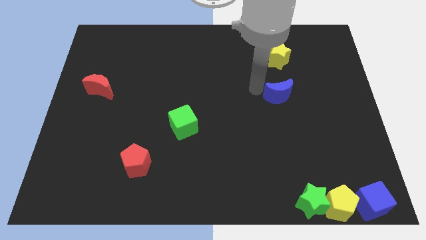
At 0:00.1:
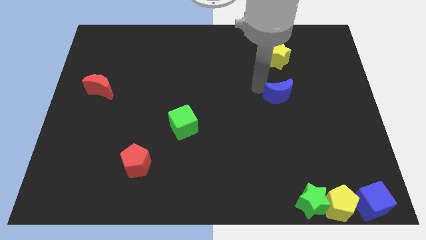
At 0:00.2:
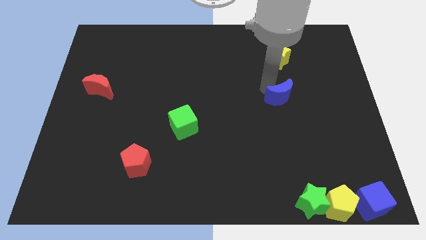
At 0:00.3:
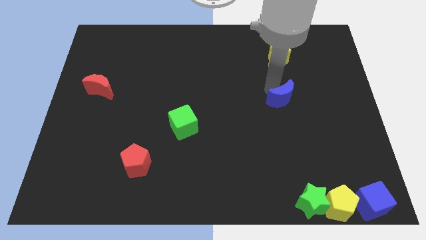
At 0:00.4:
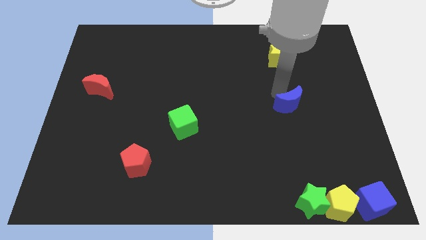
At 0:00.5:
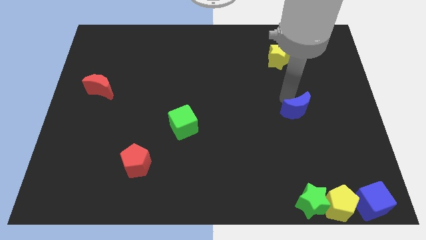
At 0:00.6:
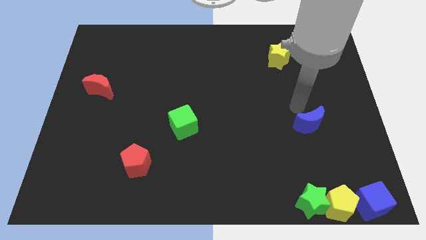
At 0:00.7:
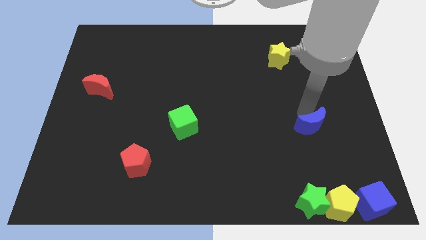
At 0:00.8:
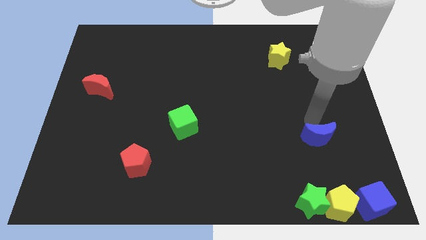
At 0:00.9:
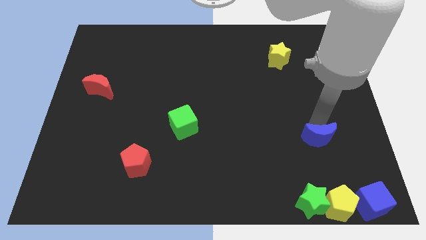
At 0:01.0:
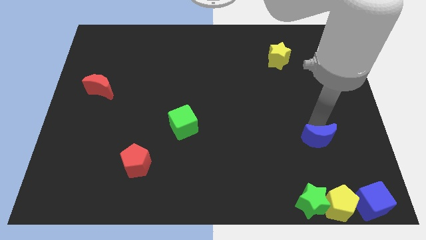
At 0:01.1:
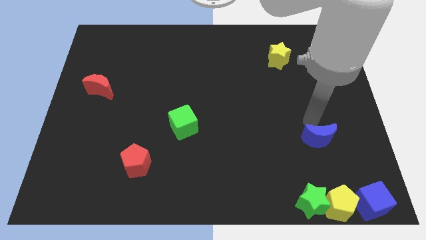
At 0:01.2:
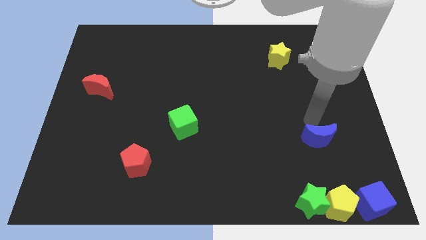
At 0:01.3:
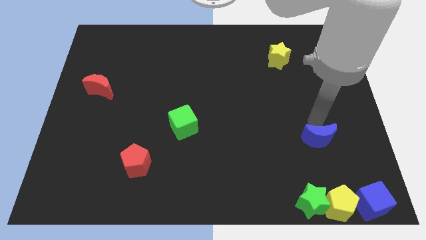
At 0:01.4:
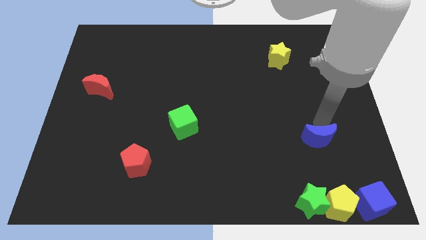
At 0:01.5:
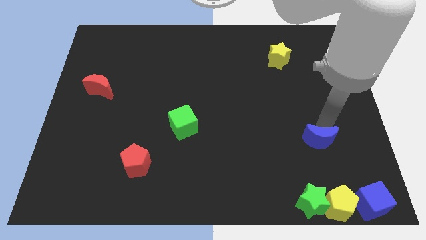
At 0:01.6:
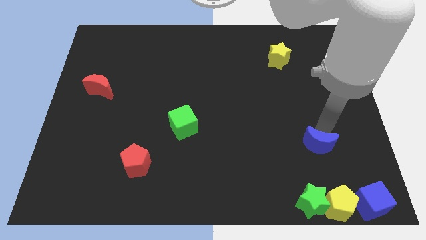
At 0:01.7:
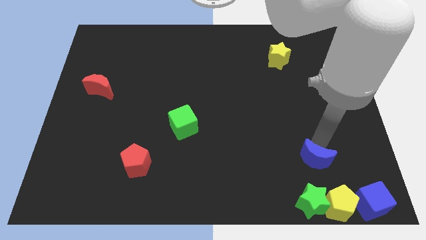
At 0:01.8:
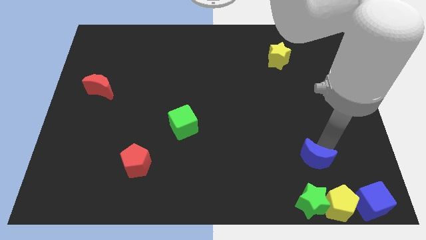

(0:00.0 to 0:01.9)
put the blue moon diagonally top right to green star

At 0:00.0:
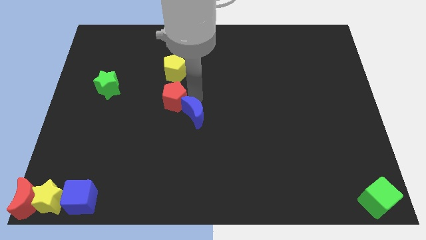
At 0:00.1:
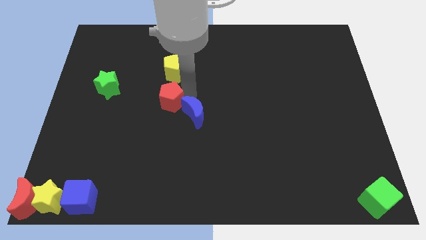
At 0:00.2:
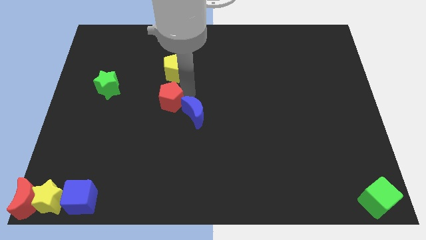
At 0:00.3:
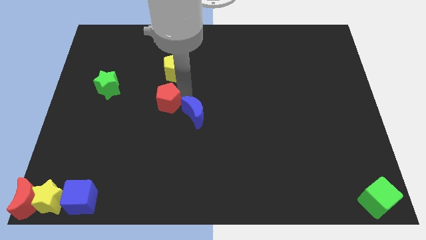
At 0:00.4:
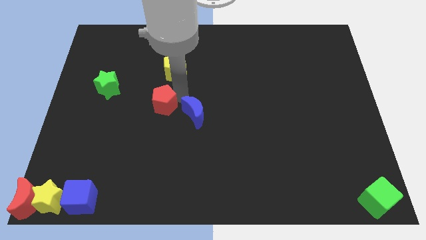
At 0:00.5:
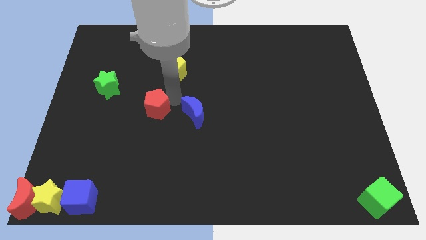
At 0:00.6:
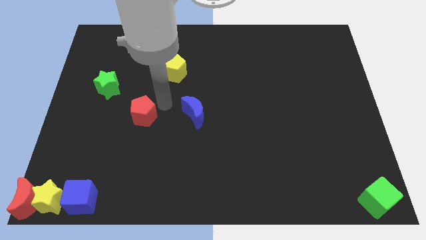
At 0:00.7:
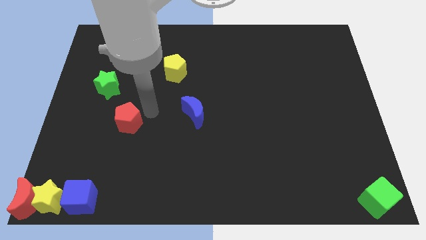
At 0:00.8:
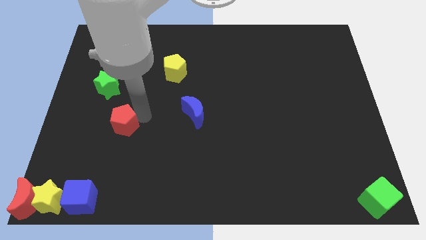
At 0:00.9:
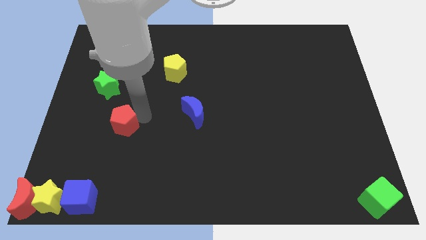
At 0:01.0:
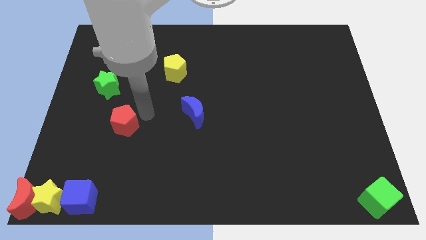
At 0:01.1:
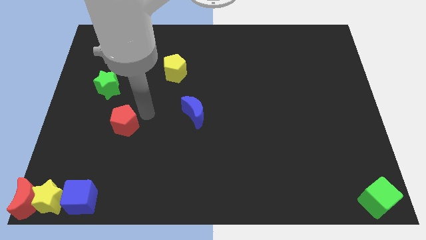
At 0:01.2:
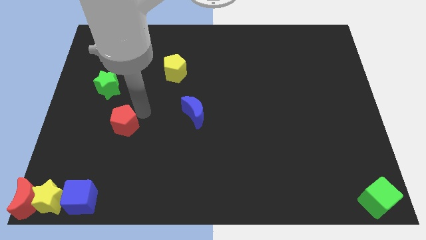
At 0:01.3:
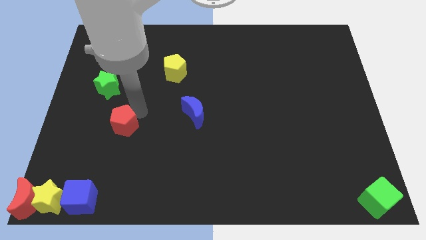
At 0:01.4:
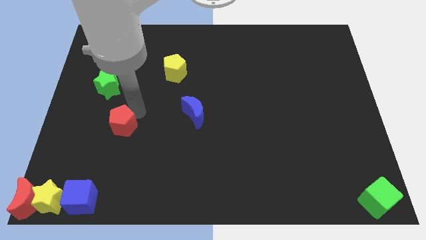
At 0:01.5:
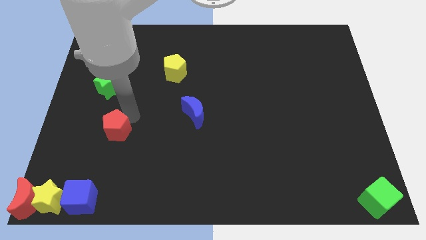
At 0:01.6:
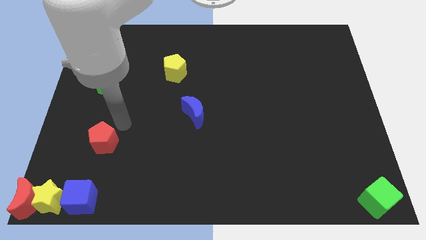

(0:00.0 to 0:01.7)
push the red pentagon towards the left bottom corner of the board

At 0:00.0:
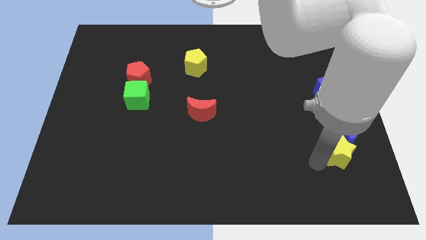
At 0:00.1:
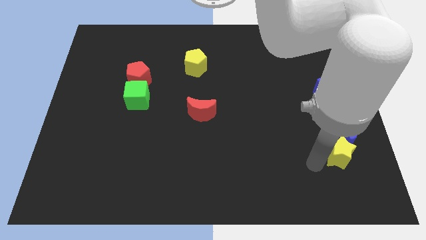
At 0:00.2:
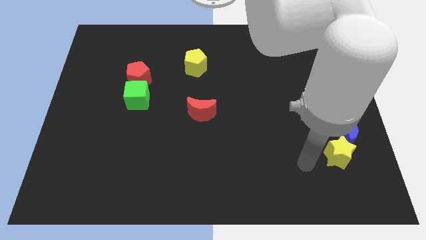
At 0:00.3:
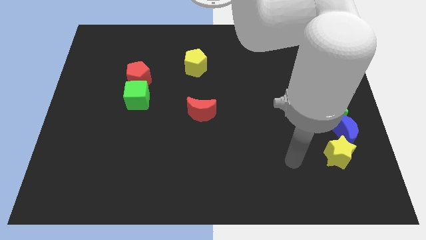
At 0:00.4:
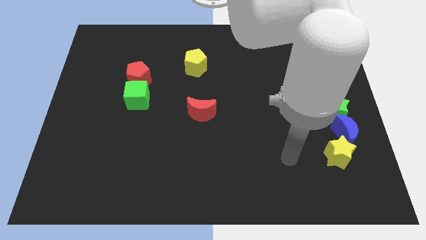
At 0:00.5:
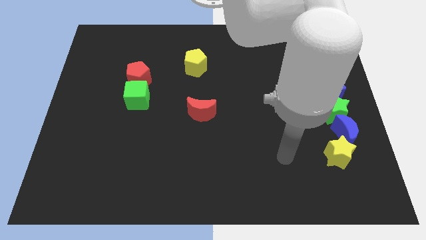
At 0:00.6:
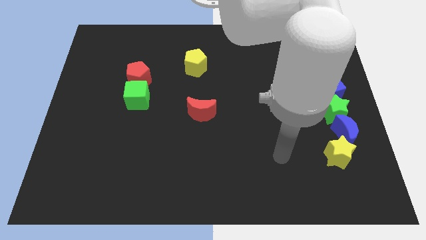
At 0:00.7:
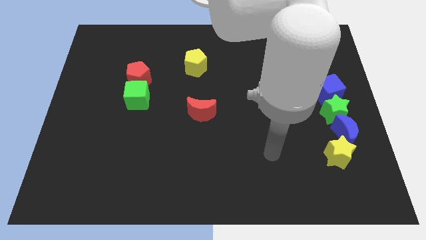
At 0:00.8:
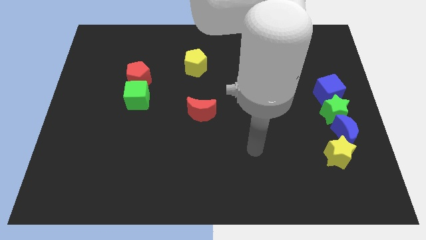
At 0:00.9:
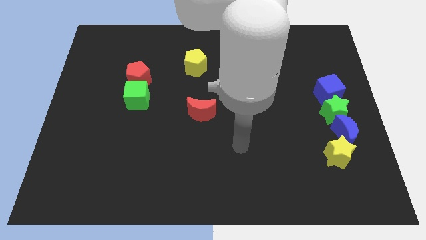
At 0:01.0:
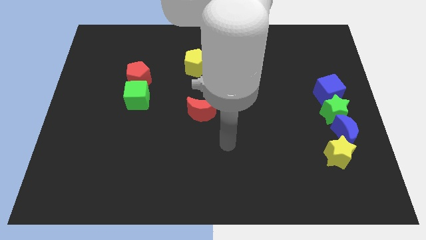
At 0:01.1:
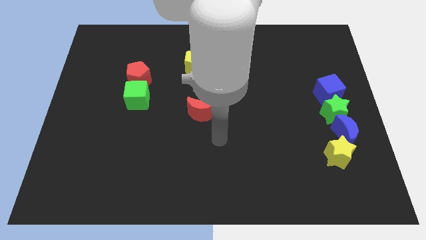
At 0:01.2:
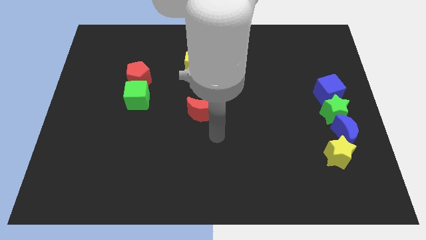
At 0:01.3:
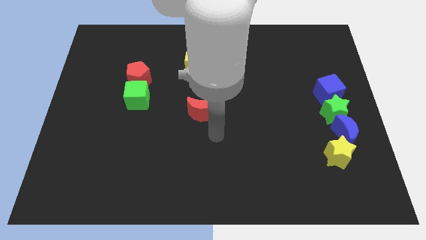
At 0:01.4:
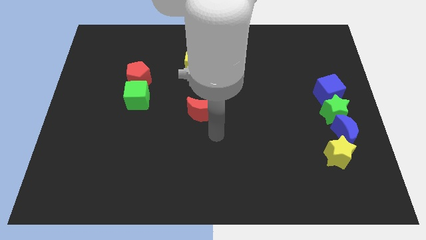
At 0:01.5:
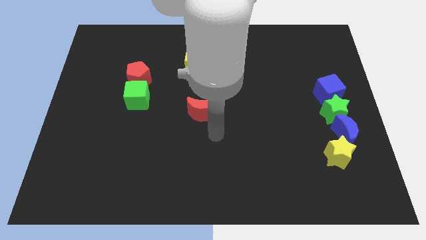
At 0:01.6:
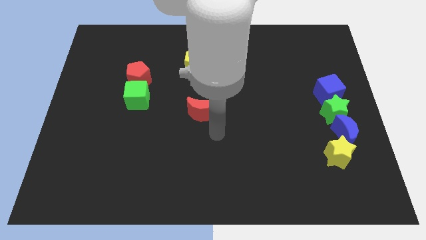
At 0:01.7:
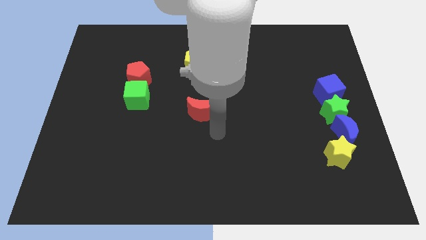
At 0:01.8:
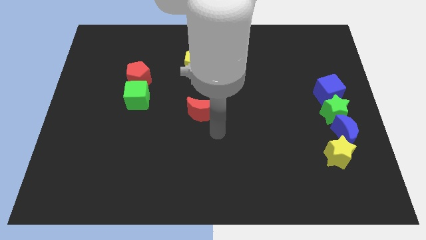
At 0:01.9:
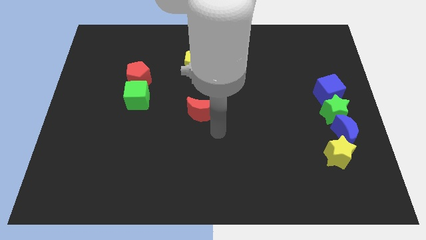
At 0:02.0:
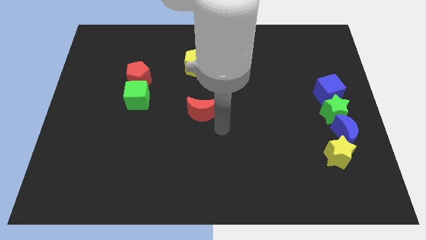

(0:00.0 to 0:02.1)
move arm near red moon

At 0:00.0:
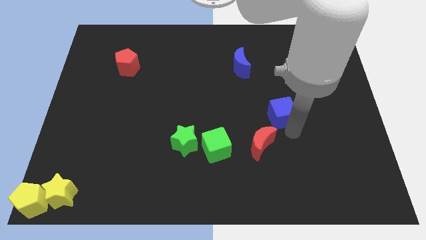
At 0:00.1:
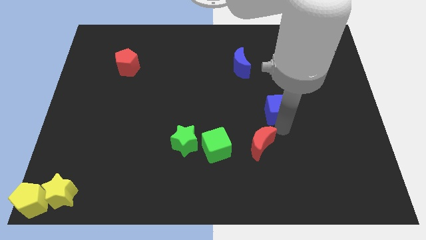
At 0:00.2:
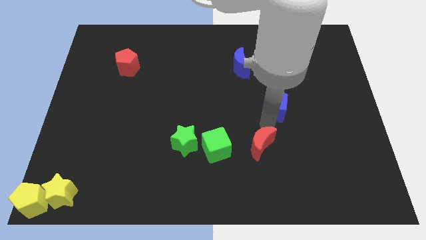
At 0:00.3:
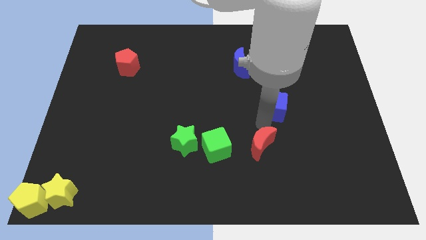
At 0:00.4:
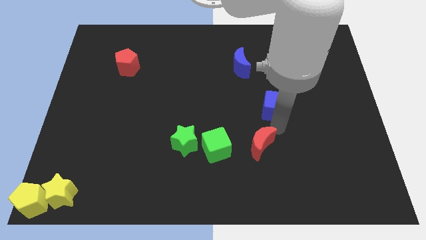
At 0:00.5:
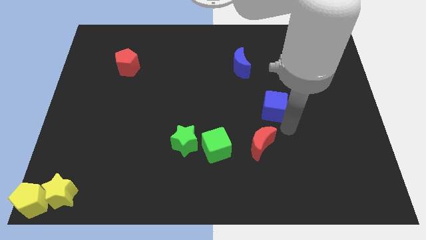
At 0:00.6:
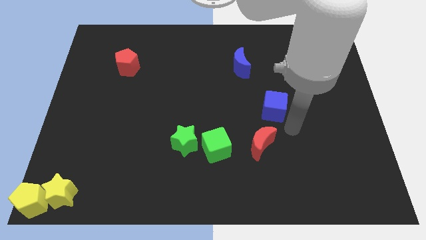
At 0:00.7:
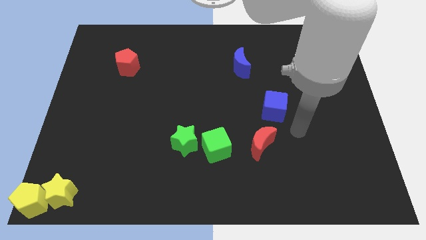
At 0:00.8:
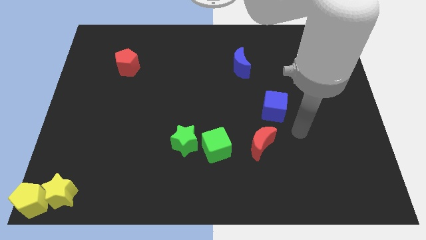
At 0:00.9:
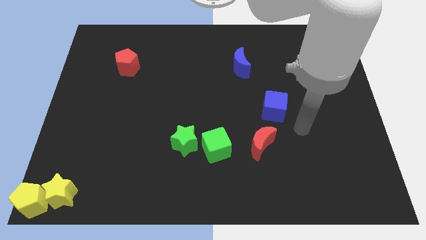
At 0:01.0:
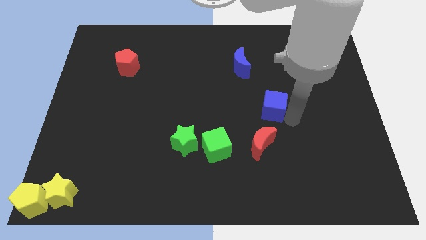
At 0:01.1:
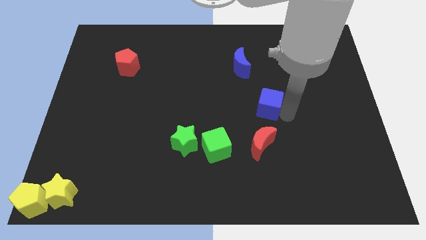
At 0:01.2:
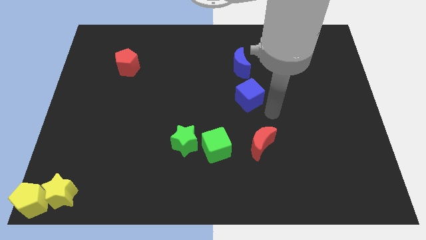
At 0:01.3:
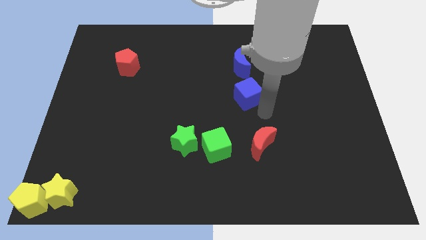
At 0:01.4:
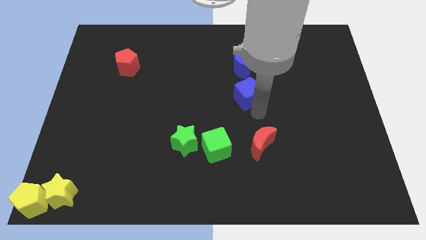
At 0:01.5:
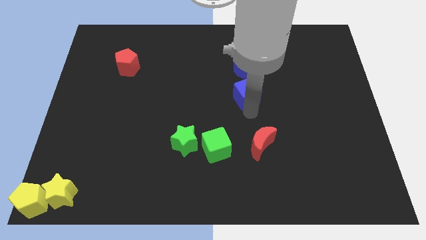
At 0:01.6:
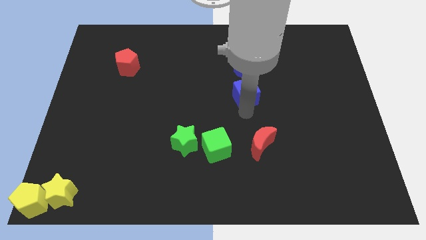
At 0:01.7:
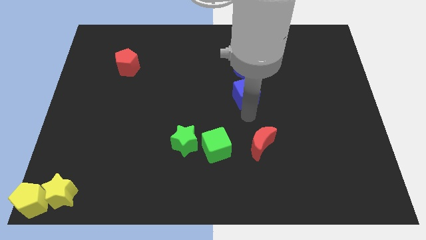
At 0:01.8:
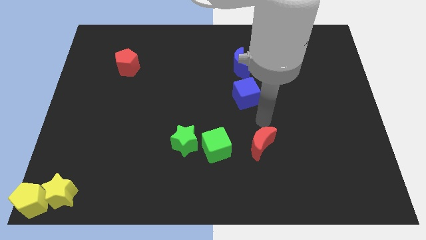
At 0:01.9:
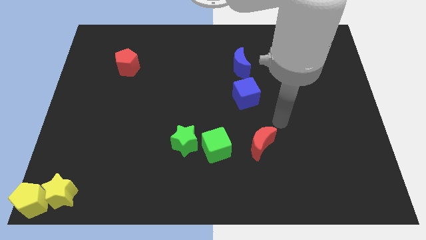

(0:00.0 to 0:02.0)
move the blue cube to the bottom of the blue crescent

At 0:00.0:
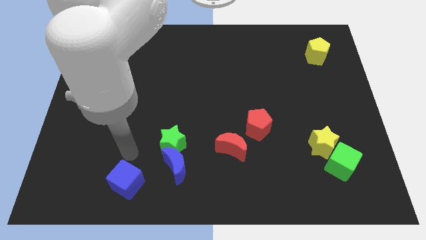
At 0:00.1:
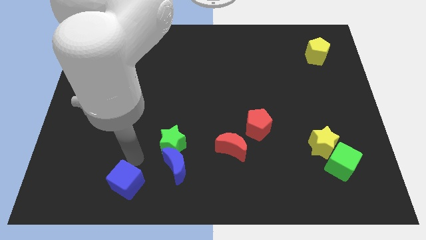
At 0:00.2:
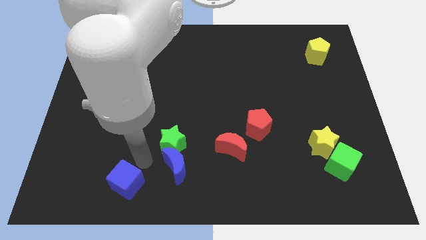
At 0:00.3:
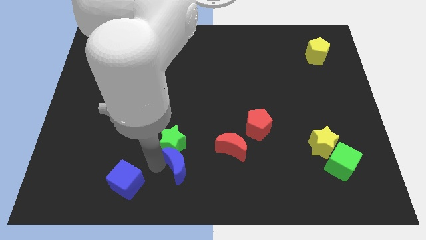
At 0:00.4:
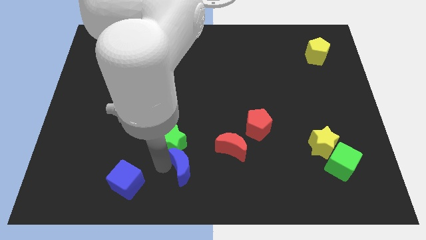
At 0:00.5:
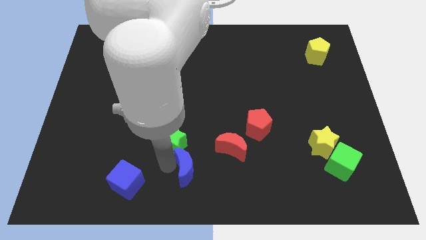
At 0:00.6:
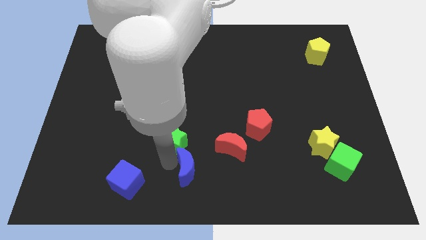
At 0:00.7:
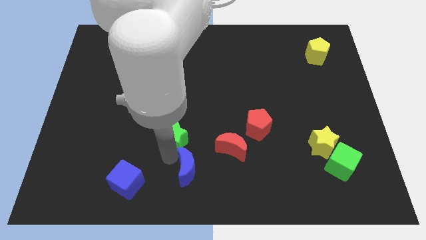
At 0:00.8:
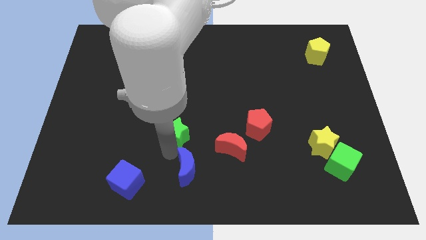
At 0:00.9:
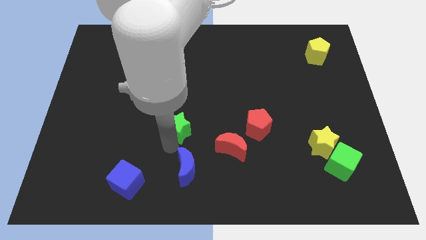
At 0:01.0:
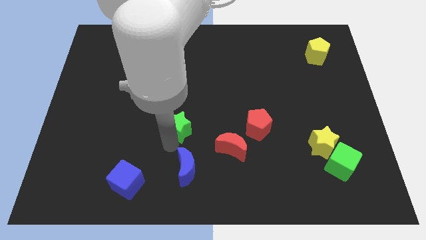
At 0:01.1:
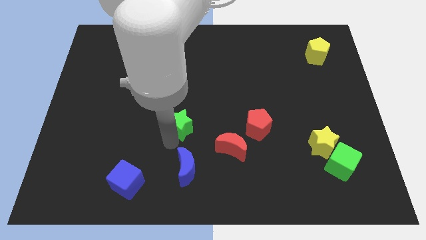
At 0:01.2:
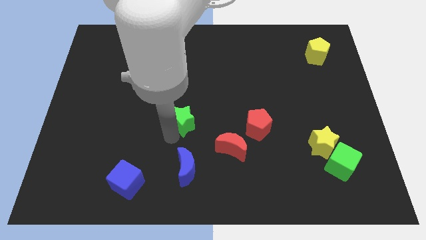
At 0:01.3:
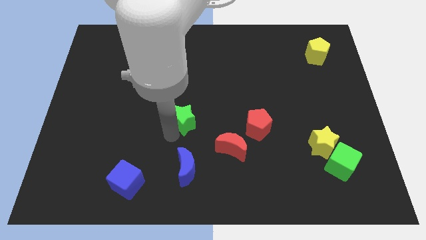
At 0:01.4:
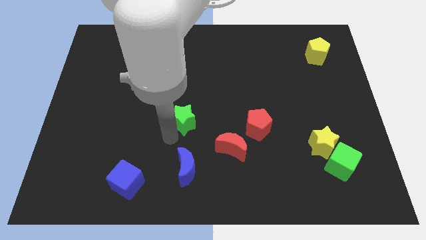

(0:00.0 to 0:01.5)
separate green star from the blue moon
